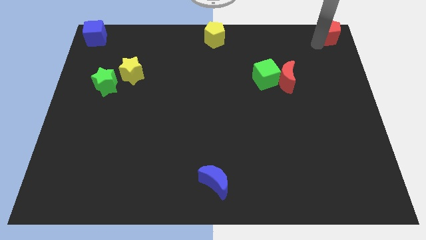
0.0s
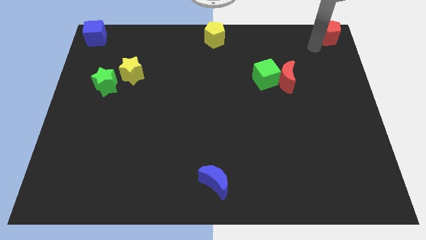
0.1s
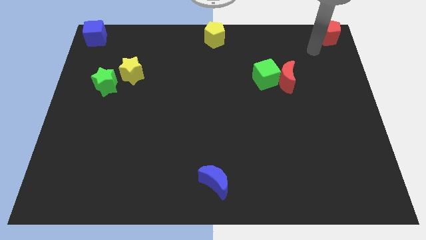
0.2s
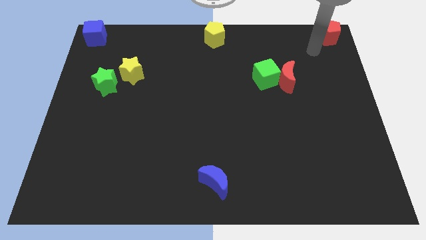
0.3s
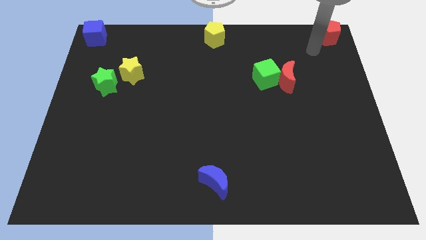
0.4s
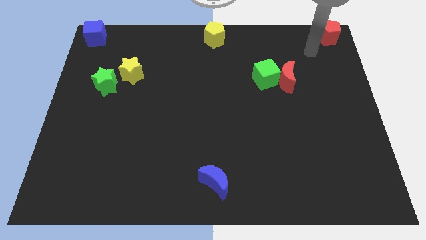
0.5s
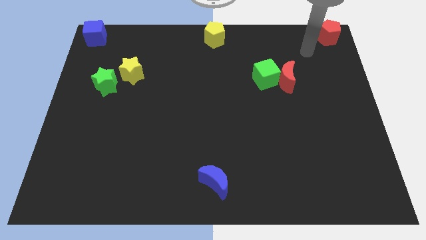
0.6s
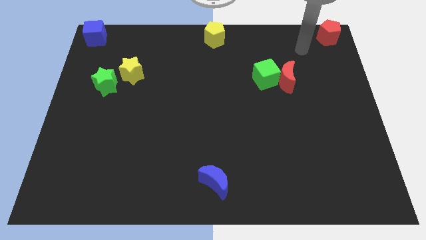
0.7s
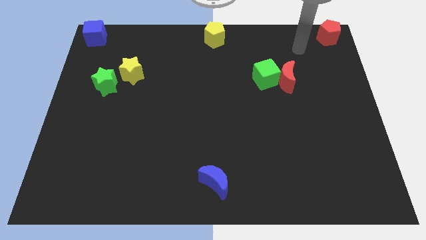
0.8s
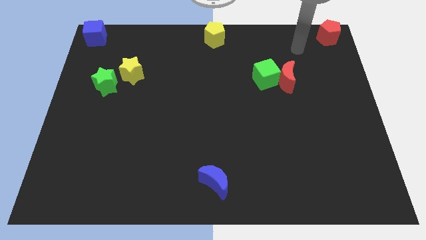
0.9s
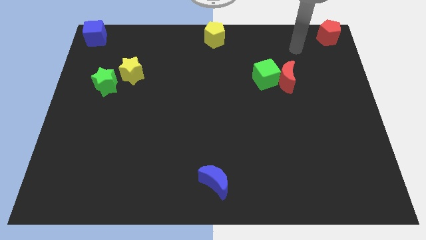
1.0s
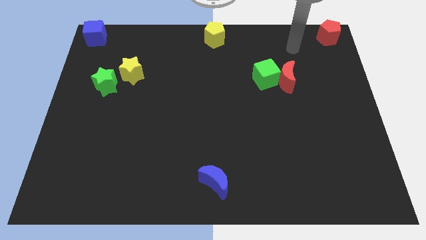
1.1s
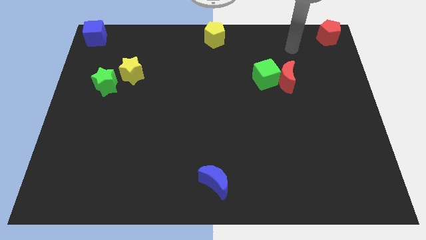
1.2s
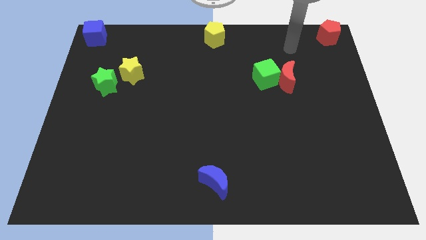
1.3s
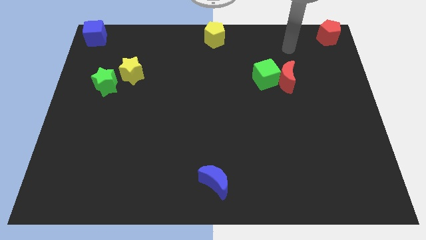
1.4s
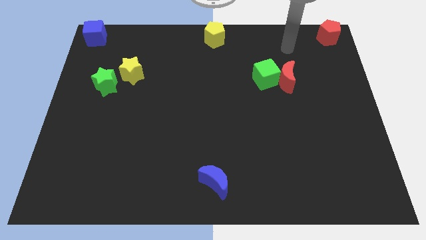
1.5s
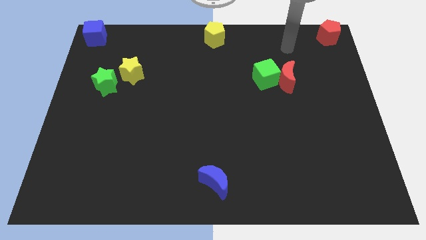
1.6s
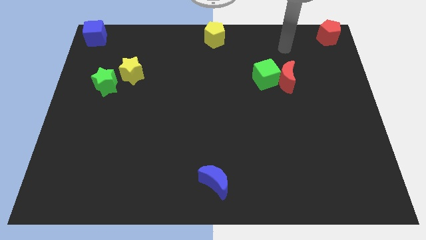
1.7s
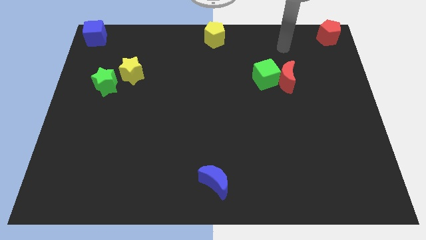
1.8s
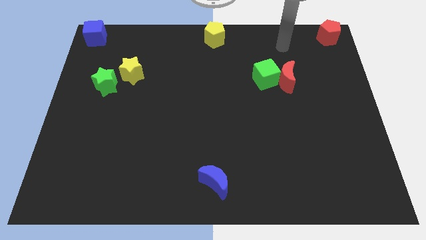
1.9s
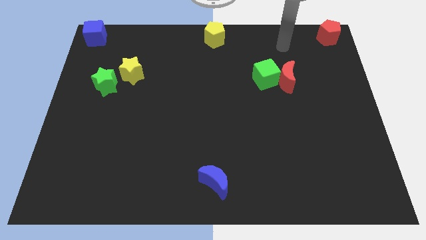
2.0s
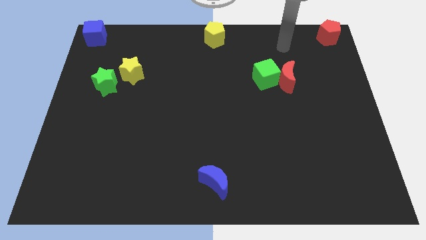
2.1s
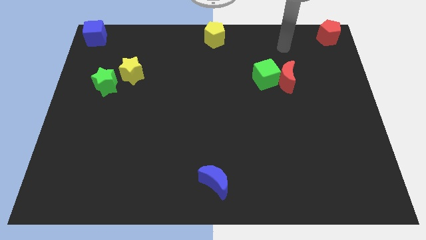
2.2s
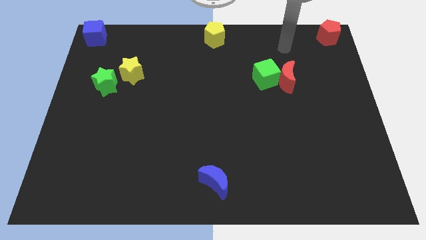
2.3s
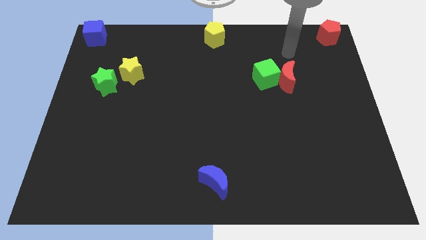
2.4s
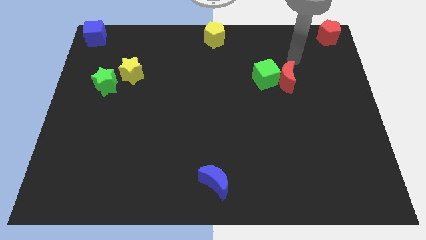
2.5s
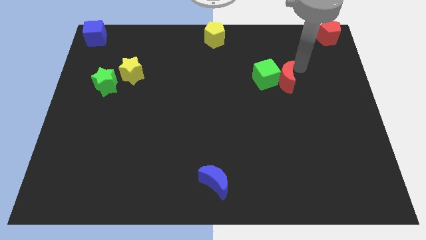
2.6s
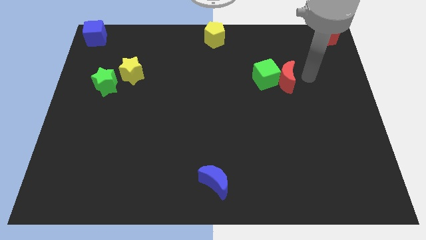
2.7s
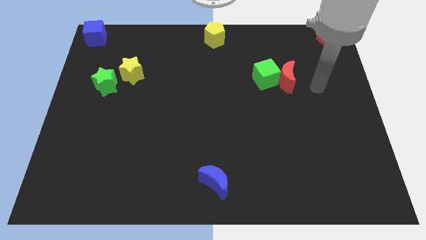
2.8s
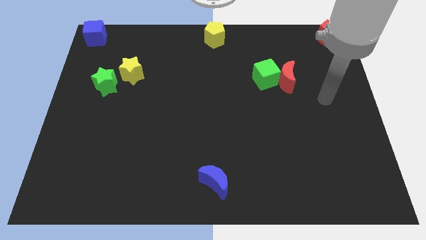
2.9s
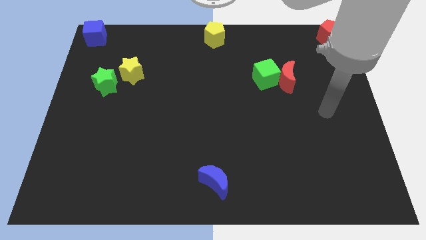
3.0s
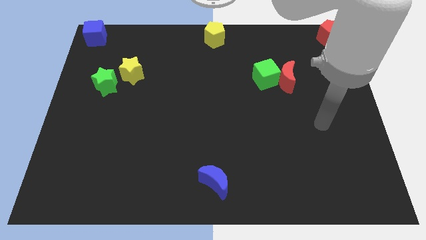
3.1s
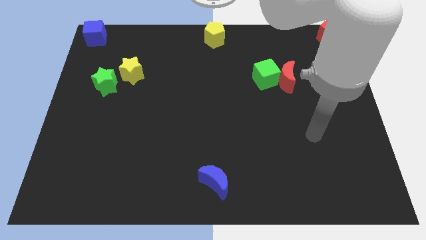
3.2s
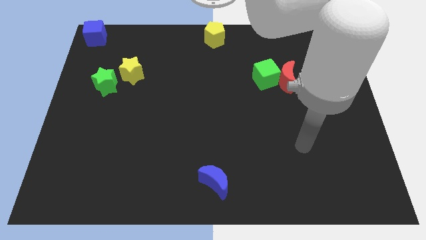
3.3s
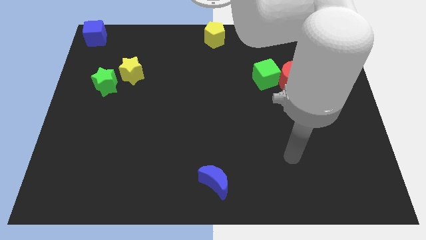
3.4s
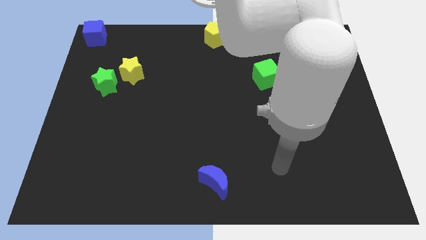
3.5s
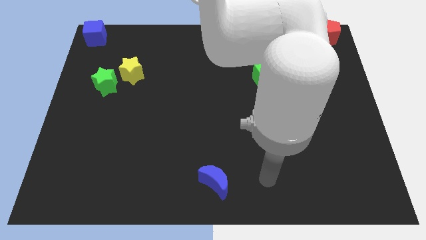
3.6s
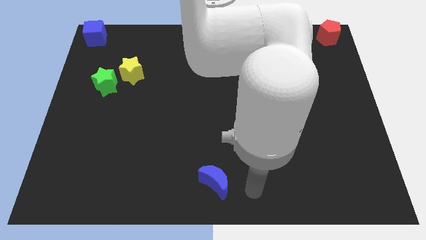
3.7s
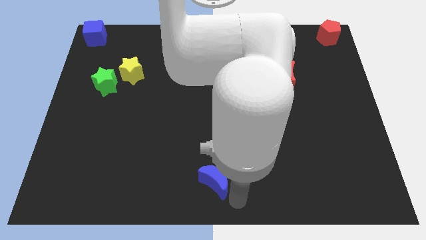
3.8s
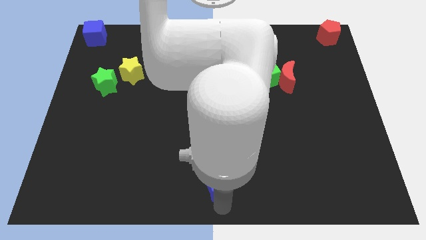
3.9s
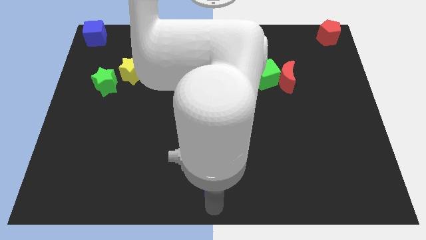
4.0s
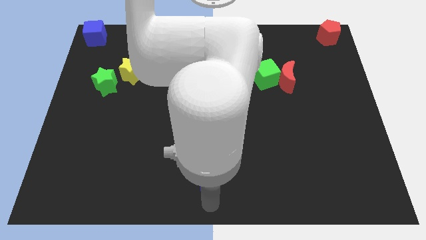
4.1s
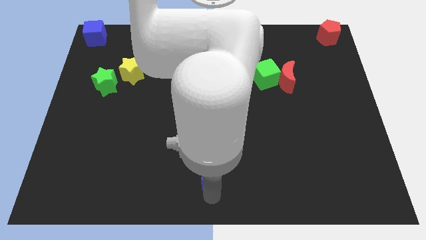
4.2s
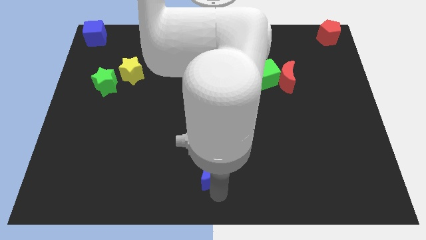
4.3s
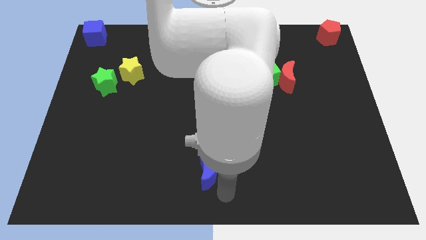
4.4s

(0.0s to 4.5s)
slightly push the blue crescent upwards

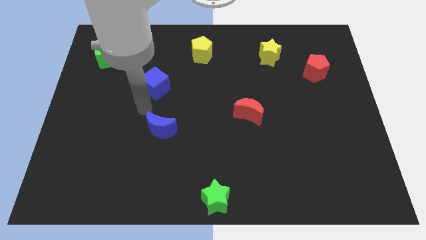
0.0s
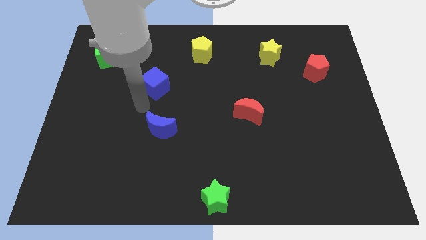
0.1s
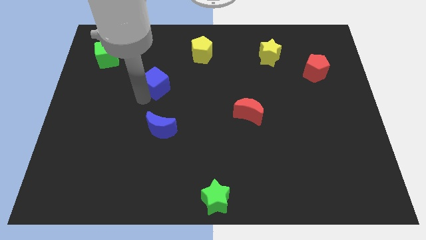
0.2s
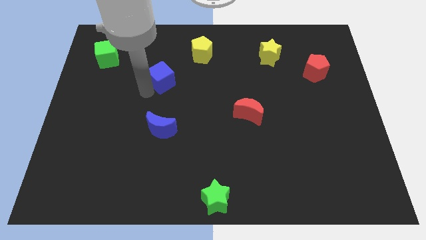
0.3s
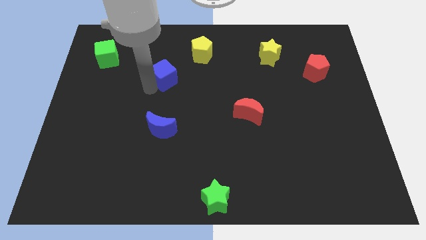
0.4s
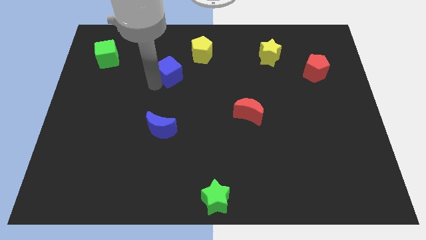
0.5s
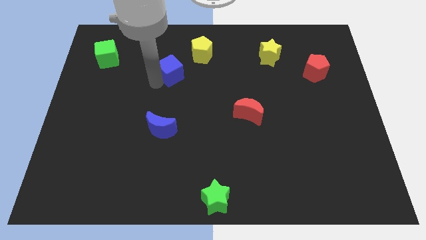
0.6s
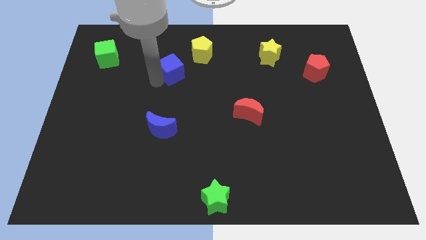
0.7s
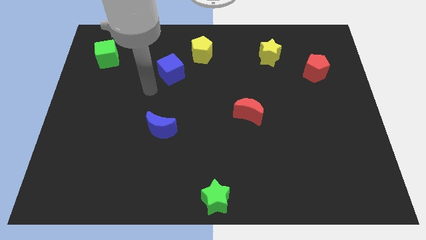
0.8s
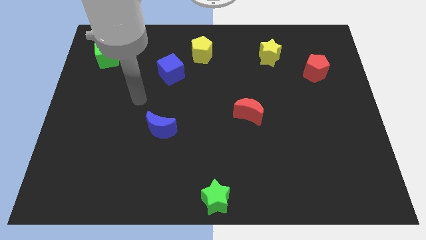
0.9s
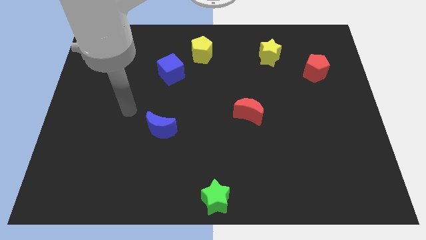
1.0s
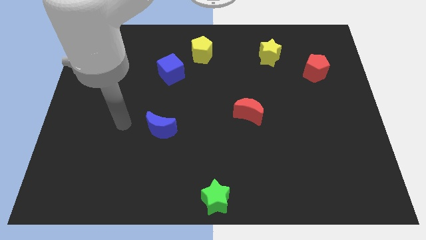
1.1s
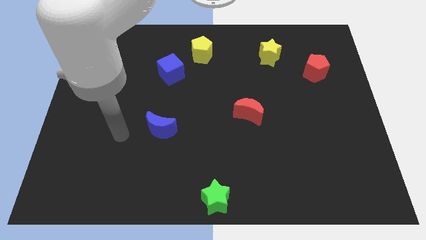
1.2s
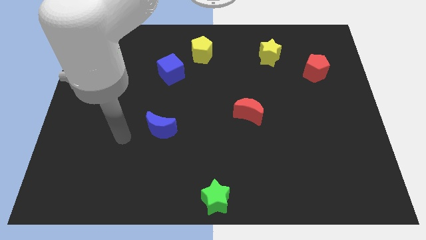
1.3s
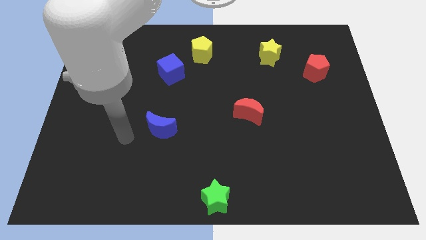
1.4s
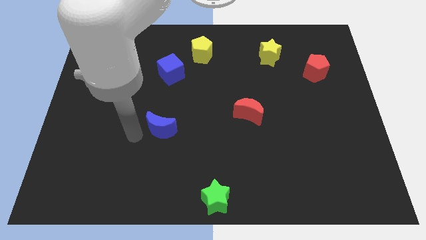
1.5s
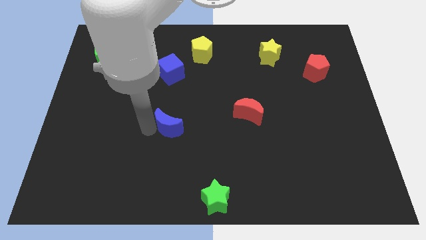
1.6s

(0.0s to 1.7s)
place blue cube close to the yellow pentagon

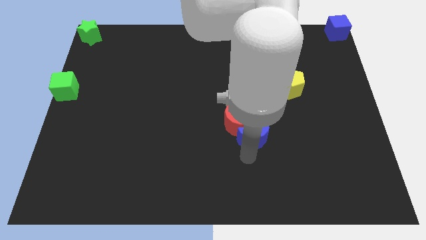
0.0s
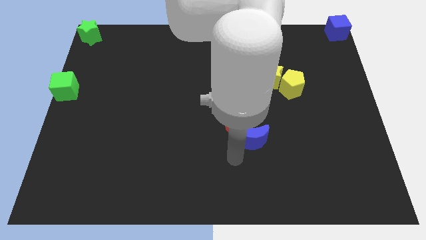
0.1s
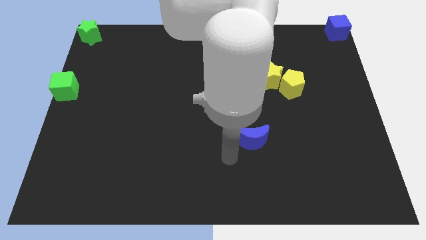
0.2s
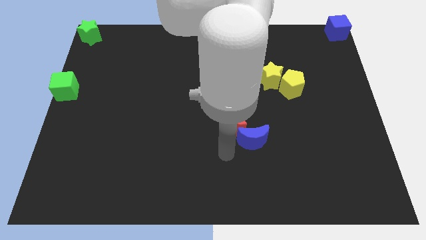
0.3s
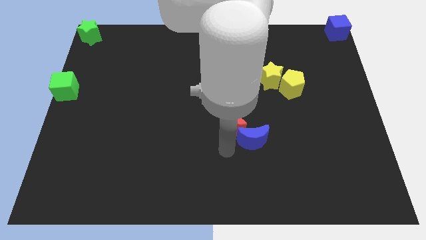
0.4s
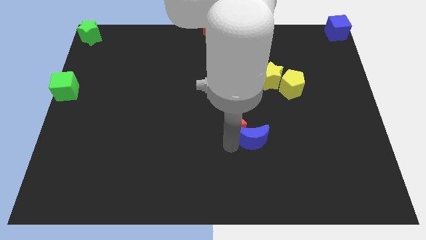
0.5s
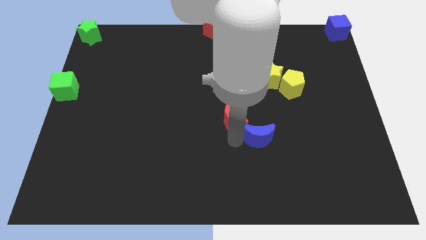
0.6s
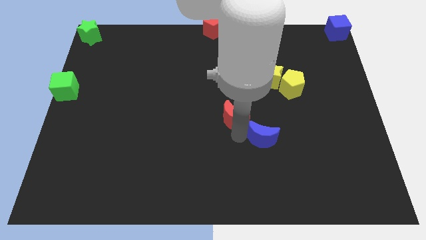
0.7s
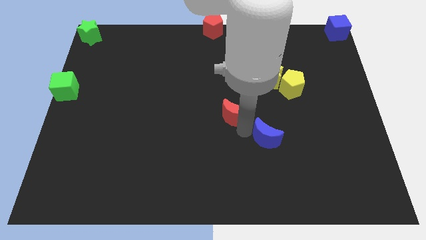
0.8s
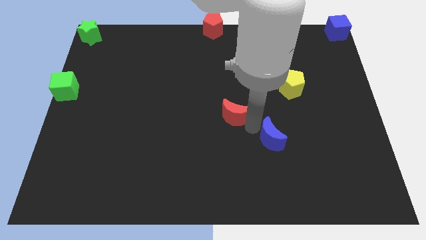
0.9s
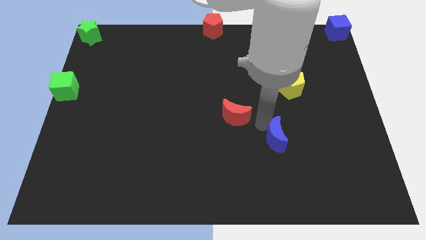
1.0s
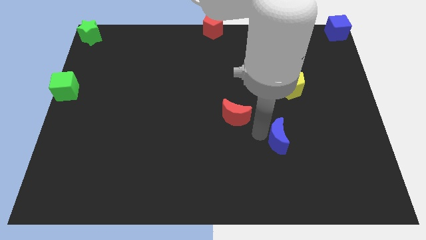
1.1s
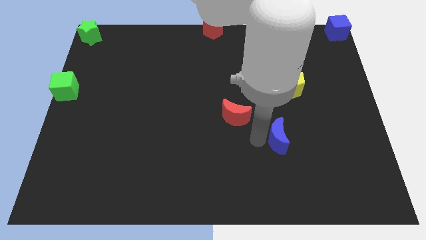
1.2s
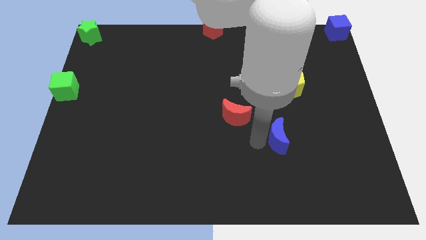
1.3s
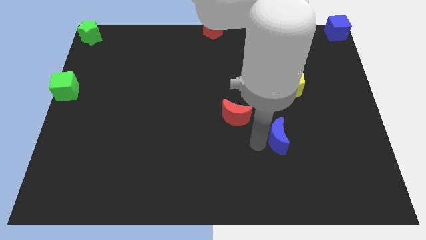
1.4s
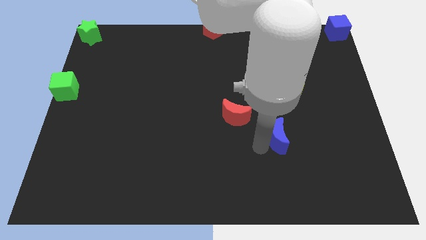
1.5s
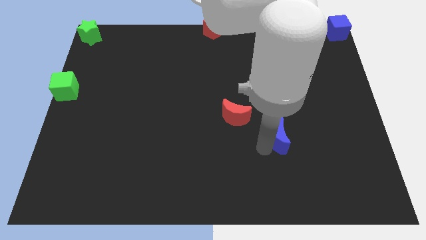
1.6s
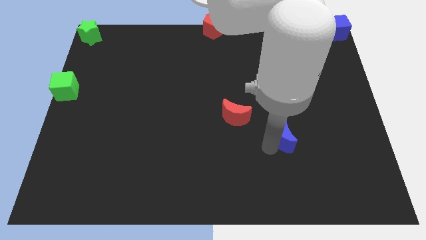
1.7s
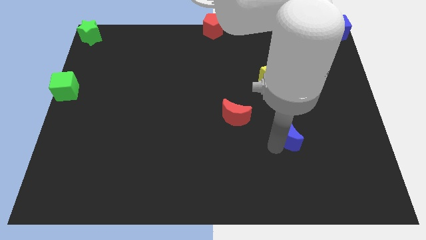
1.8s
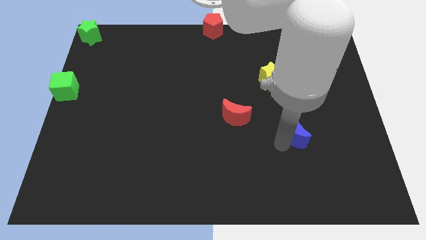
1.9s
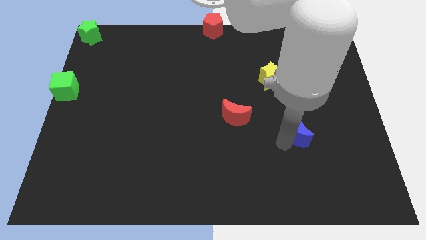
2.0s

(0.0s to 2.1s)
separate the both the crescents from each other

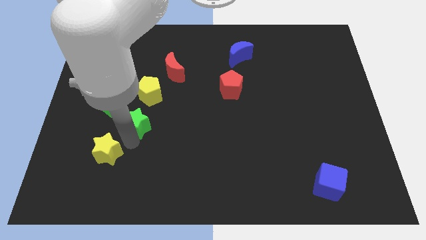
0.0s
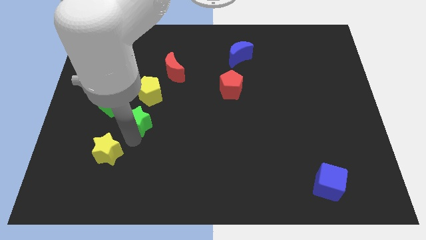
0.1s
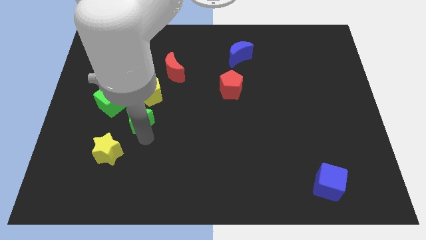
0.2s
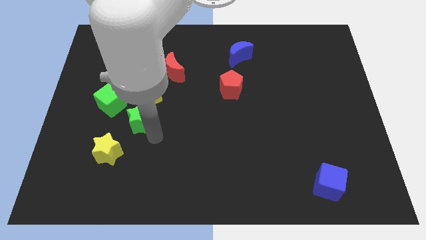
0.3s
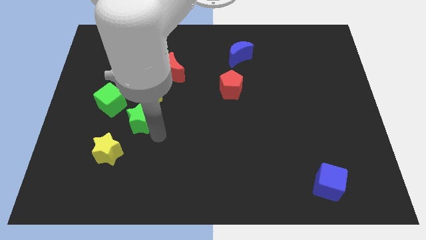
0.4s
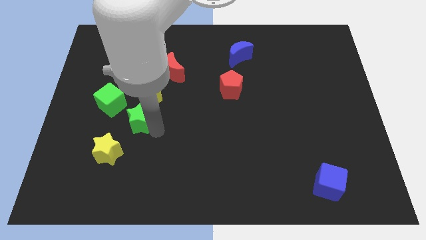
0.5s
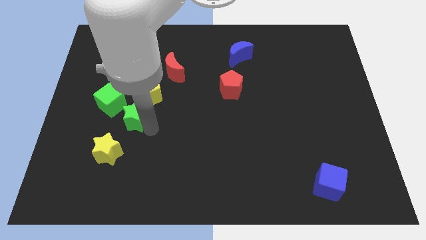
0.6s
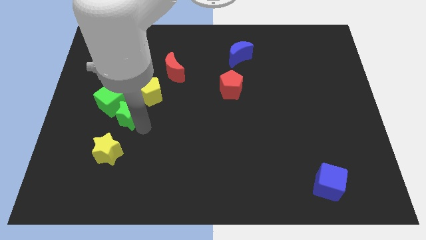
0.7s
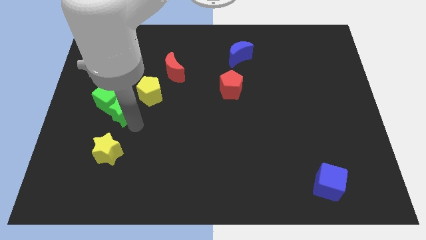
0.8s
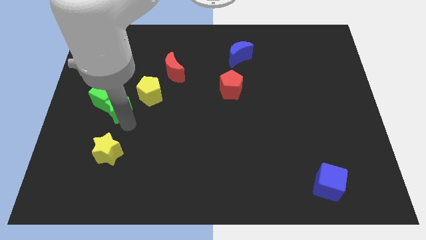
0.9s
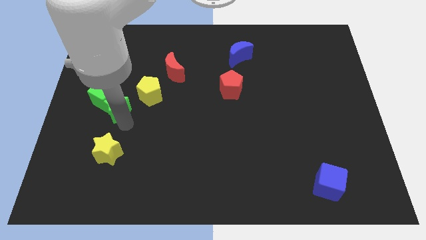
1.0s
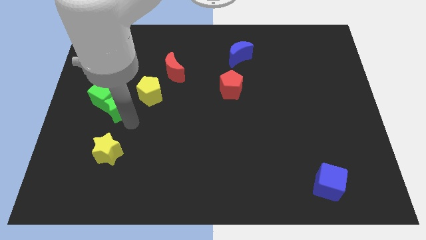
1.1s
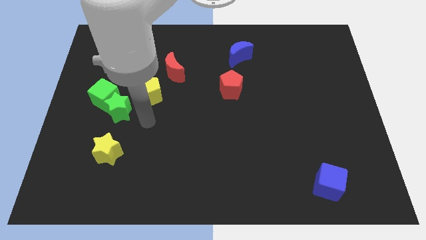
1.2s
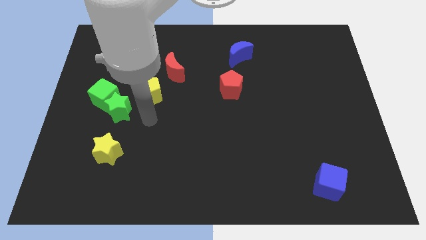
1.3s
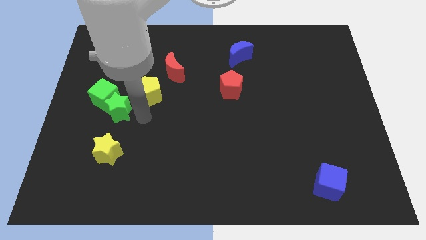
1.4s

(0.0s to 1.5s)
push the green star into the green cube
